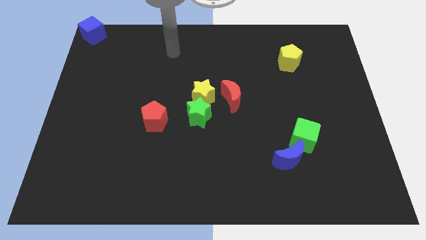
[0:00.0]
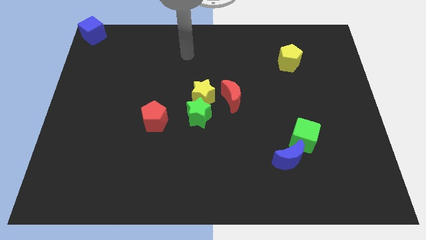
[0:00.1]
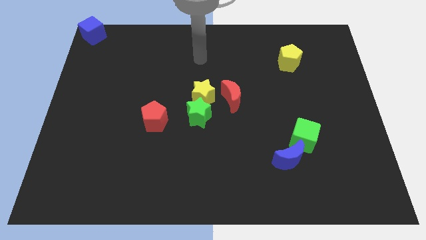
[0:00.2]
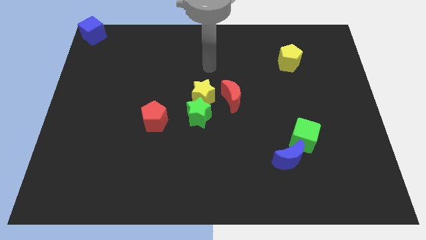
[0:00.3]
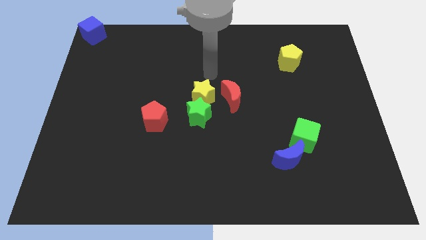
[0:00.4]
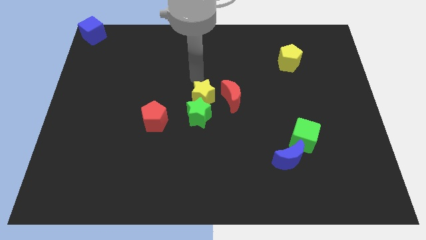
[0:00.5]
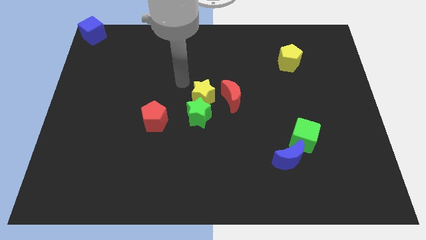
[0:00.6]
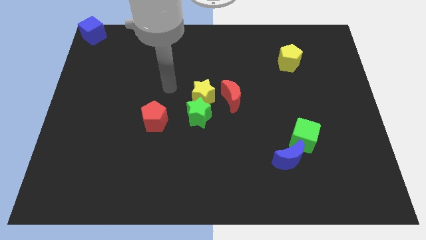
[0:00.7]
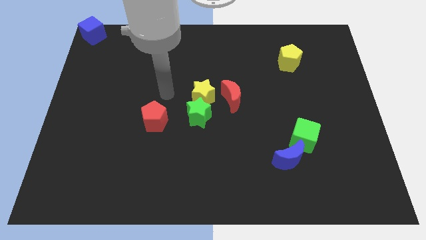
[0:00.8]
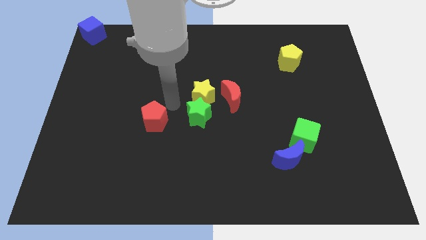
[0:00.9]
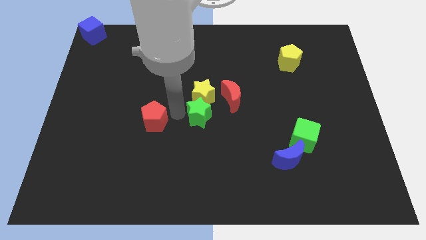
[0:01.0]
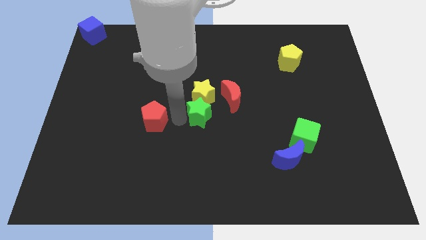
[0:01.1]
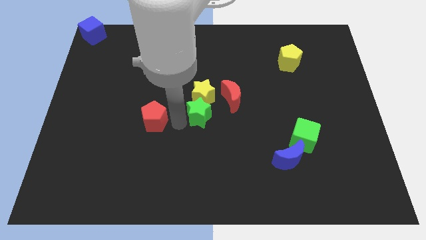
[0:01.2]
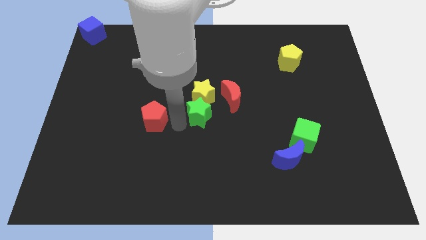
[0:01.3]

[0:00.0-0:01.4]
place arm in between red pentagon and green star

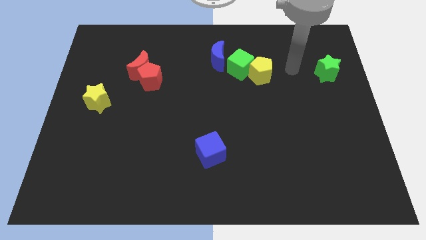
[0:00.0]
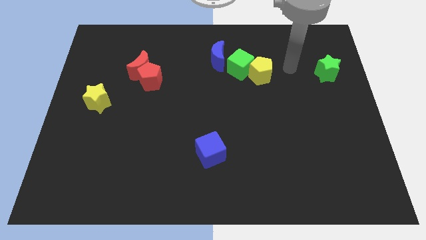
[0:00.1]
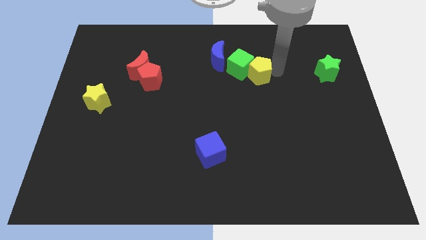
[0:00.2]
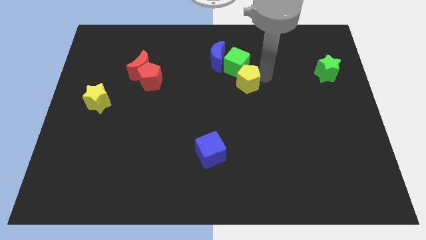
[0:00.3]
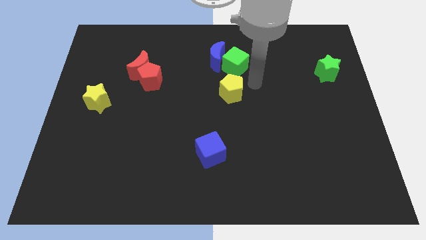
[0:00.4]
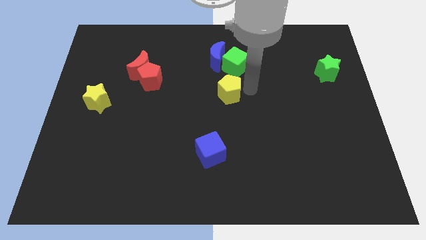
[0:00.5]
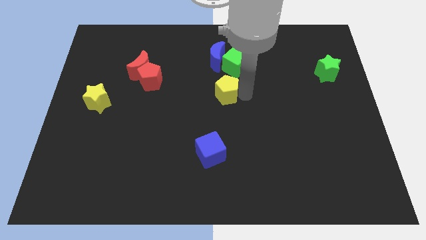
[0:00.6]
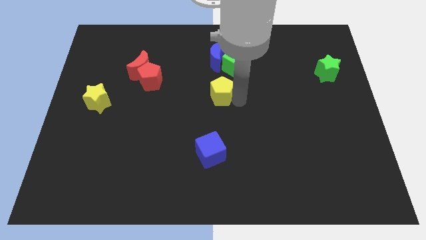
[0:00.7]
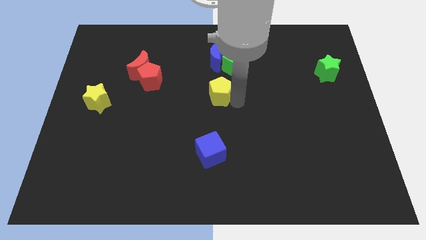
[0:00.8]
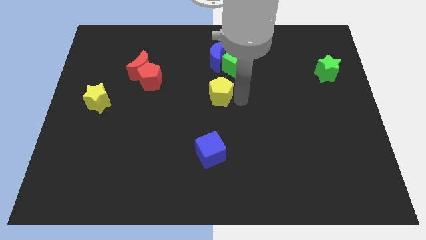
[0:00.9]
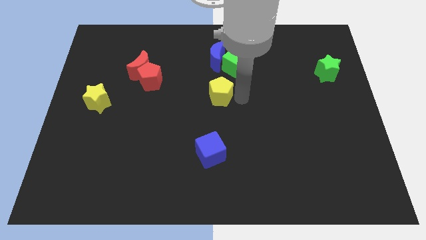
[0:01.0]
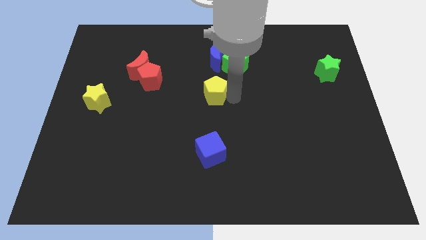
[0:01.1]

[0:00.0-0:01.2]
place the yellow pentagon above the blue cube

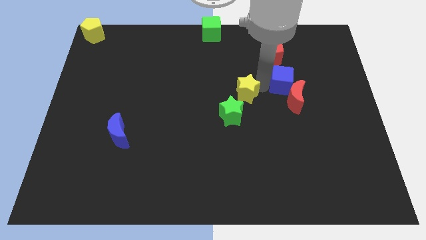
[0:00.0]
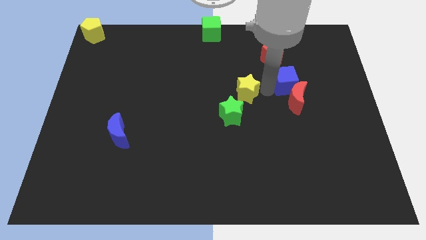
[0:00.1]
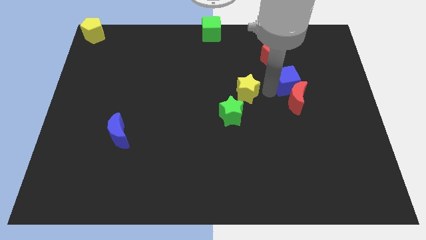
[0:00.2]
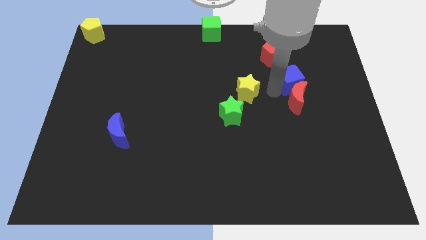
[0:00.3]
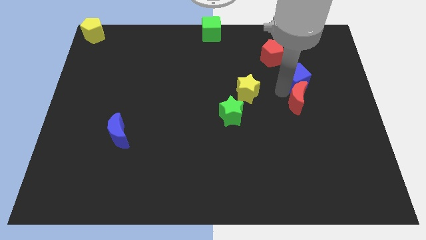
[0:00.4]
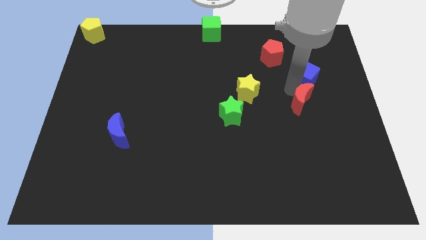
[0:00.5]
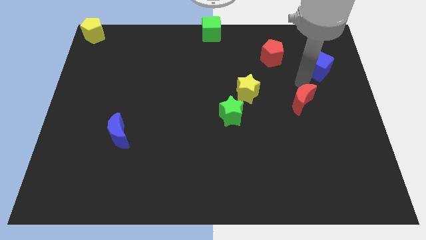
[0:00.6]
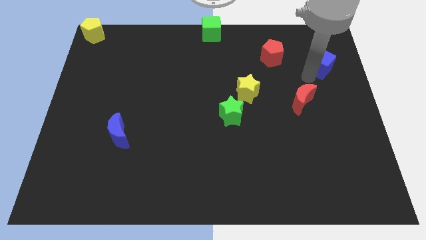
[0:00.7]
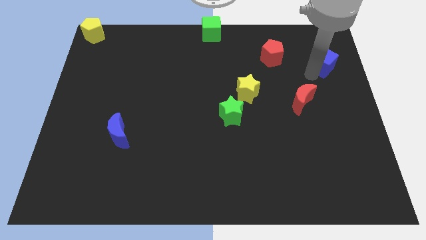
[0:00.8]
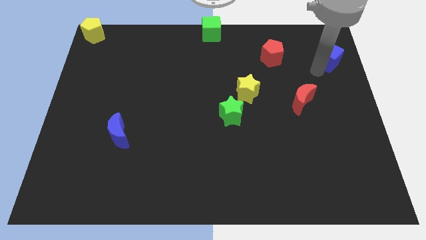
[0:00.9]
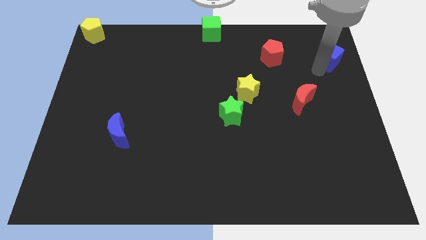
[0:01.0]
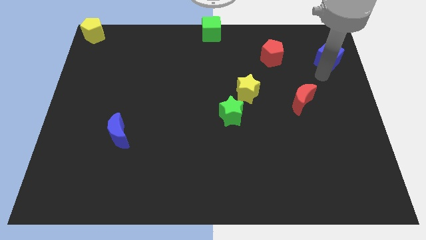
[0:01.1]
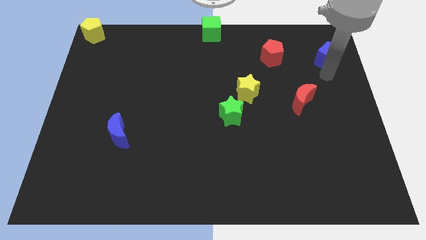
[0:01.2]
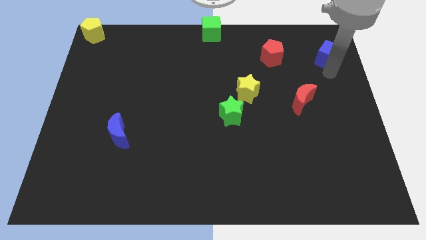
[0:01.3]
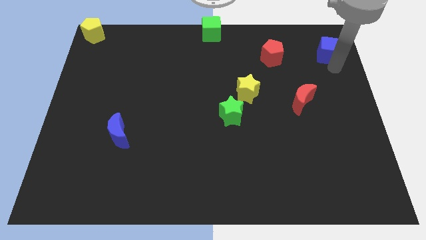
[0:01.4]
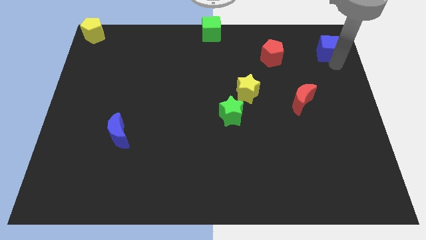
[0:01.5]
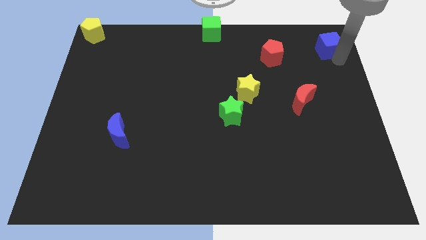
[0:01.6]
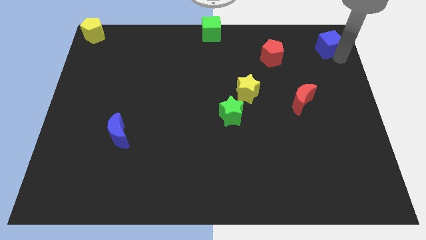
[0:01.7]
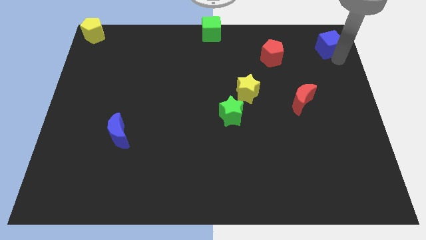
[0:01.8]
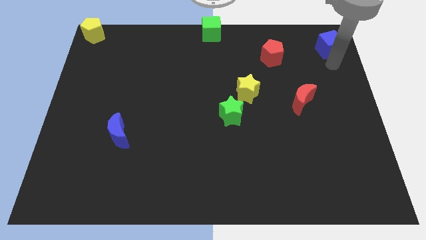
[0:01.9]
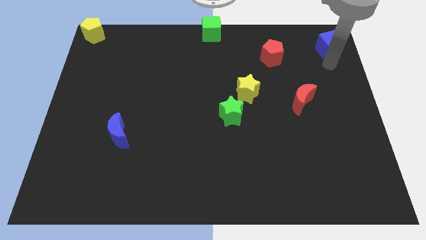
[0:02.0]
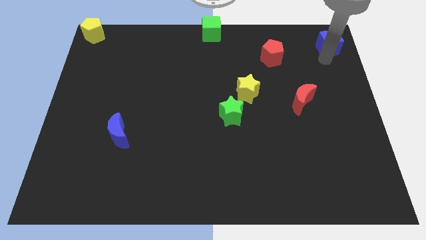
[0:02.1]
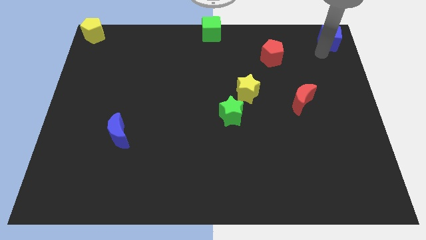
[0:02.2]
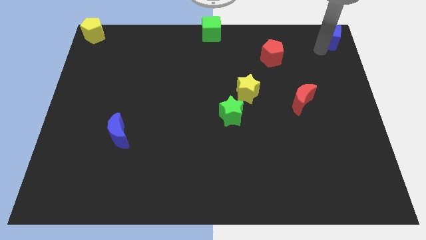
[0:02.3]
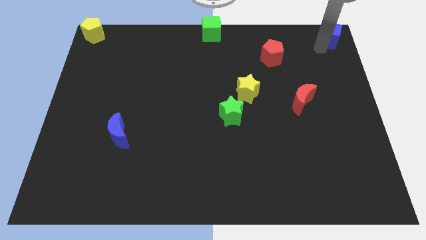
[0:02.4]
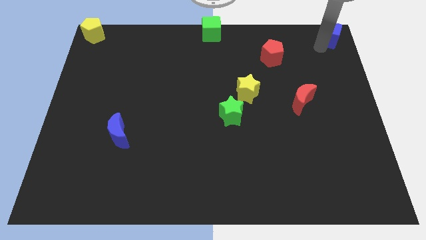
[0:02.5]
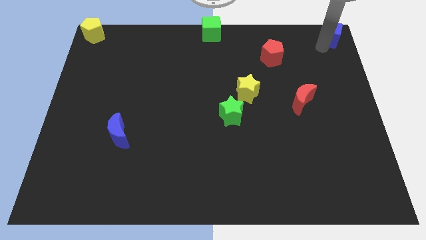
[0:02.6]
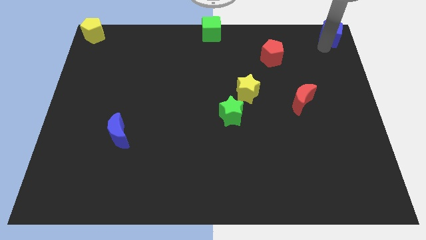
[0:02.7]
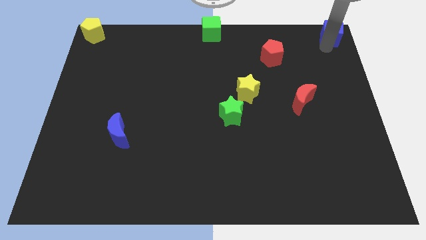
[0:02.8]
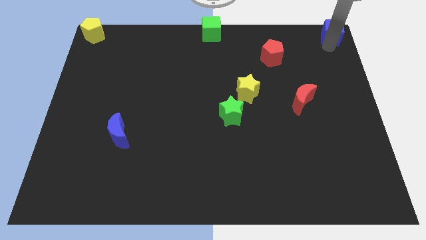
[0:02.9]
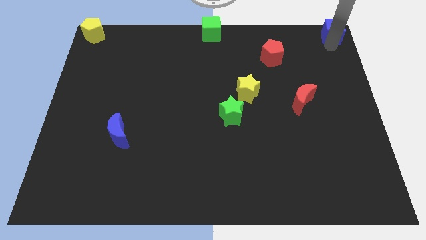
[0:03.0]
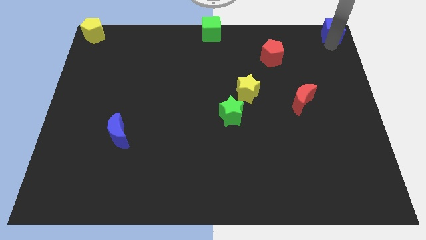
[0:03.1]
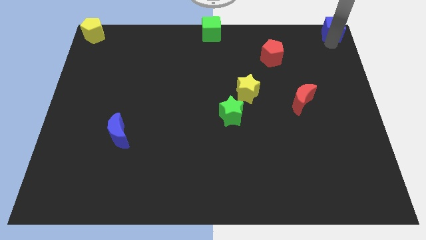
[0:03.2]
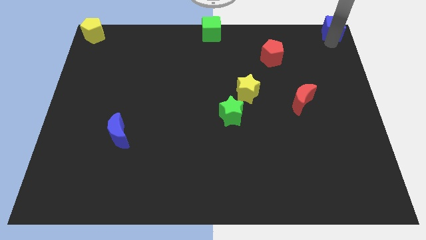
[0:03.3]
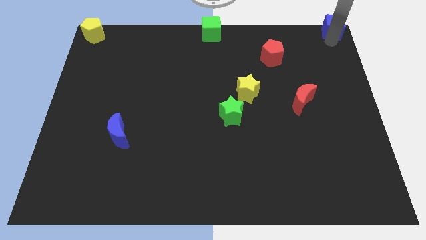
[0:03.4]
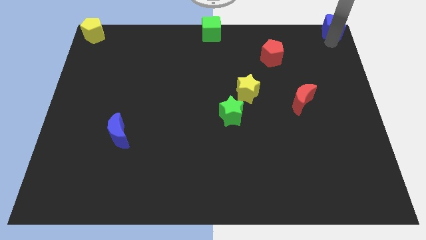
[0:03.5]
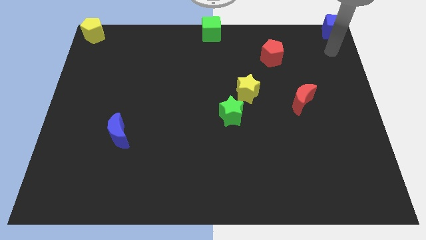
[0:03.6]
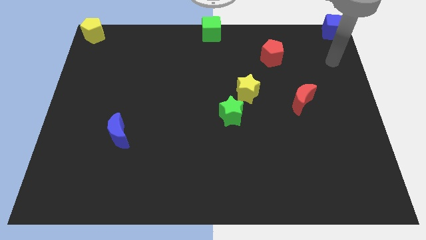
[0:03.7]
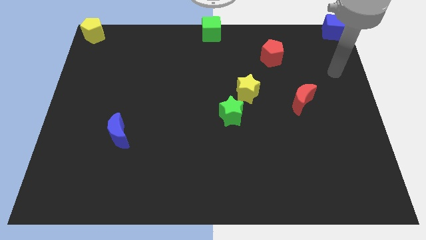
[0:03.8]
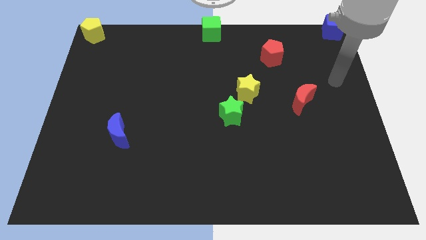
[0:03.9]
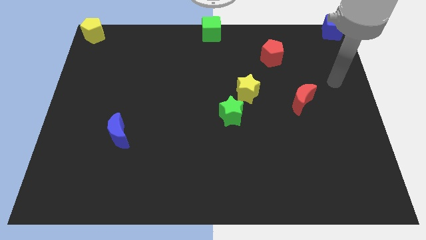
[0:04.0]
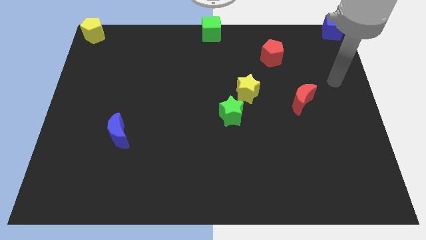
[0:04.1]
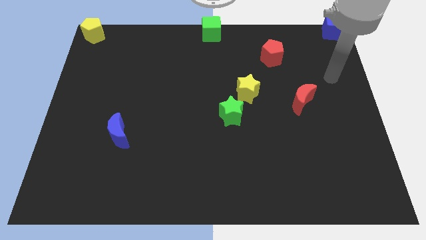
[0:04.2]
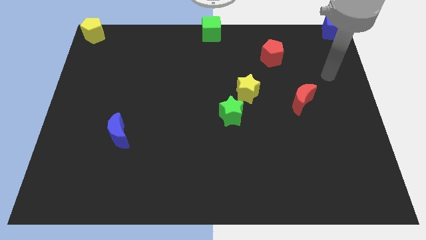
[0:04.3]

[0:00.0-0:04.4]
move the blue cube to the top right corner of the board

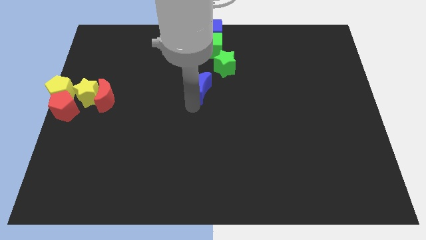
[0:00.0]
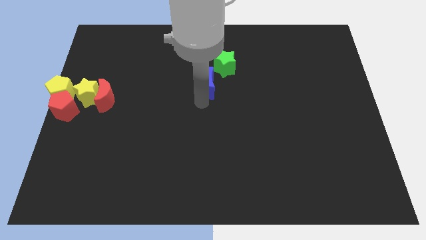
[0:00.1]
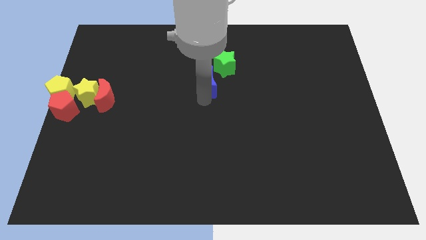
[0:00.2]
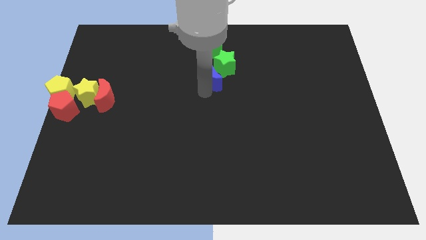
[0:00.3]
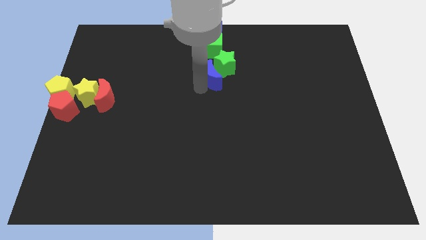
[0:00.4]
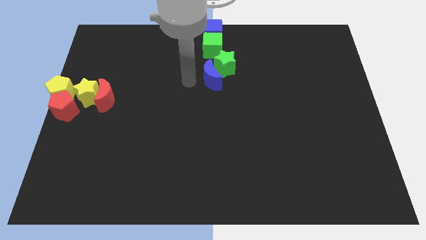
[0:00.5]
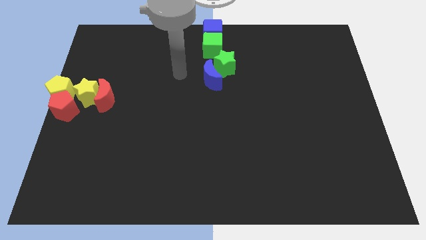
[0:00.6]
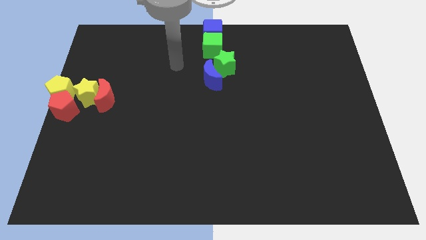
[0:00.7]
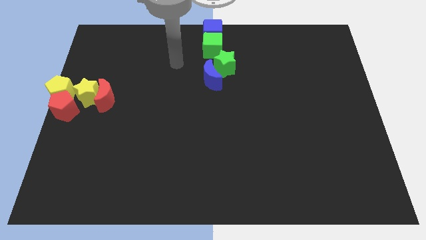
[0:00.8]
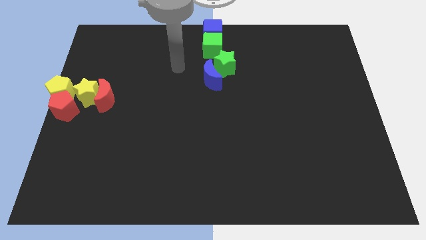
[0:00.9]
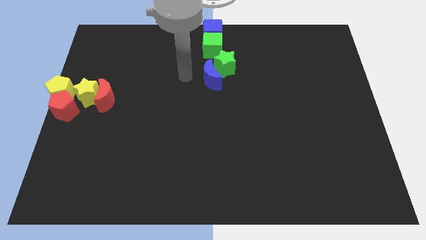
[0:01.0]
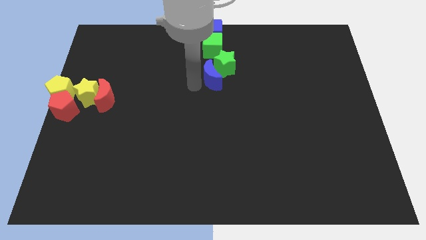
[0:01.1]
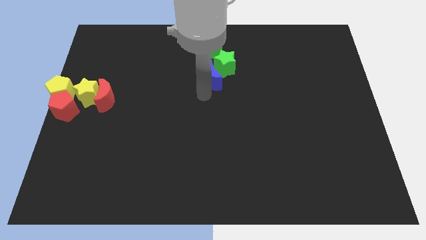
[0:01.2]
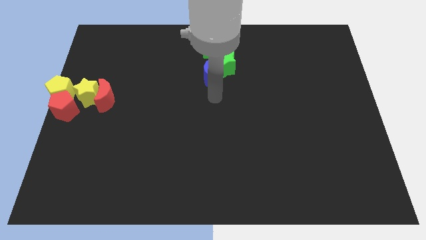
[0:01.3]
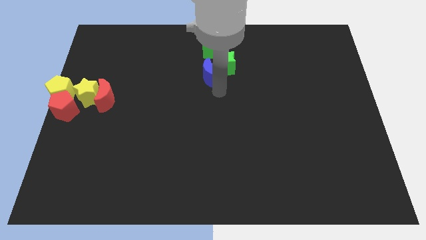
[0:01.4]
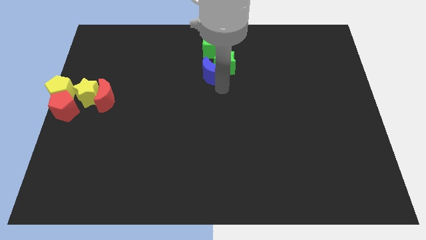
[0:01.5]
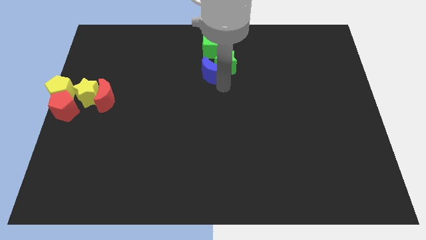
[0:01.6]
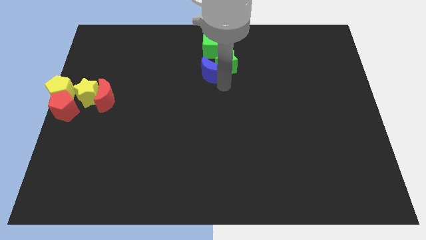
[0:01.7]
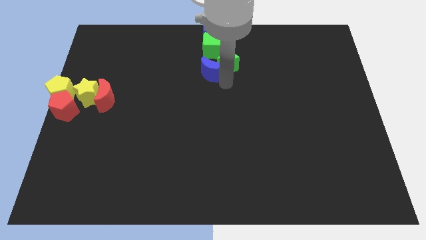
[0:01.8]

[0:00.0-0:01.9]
place the blue crescent into the green star
